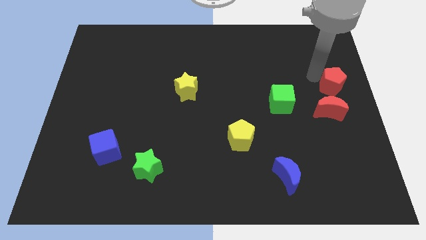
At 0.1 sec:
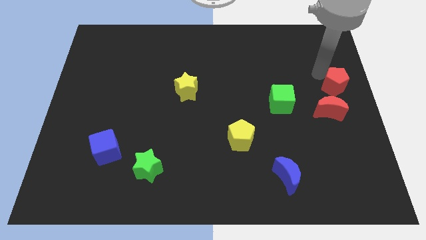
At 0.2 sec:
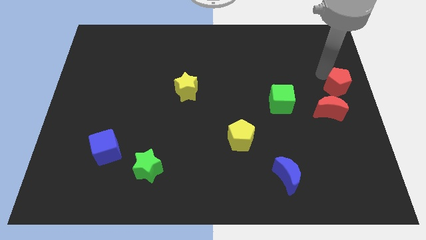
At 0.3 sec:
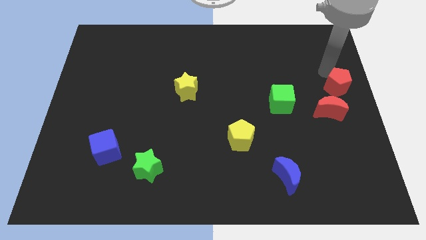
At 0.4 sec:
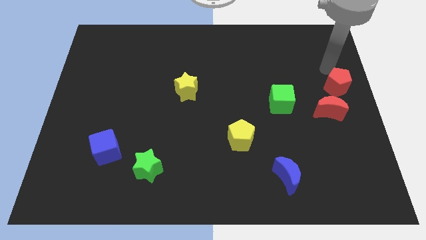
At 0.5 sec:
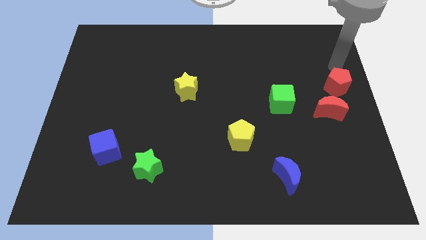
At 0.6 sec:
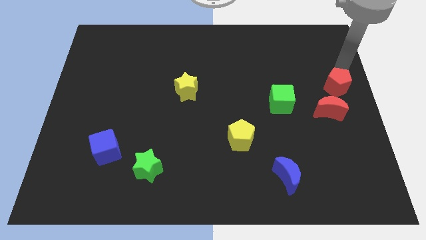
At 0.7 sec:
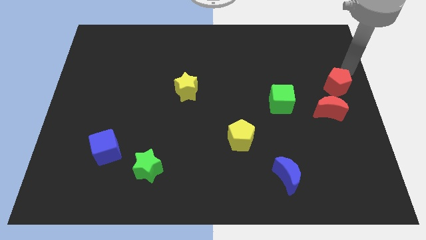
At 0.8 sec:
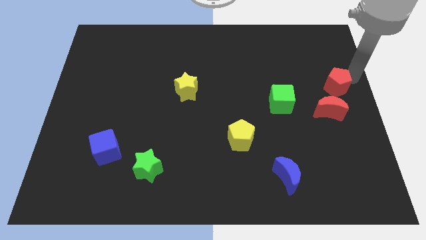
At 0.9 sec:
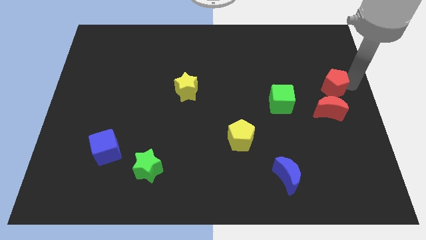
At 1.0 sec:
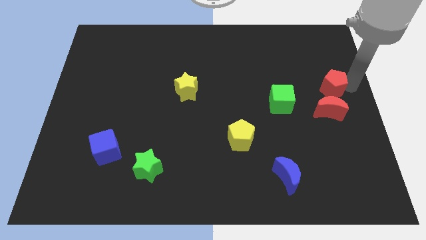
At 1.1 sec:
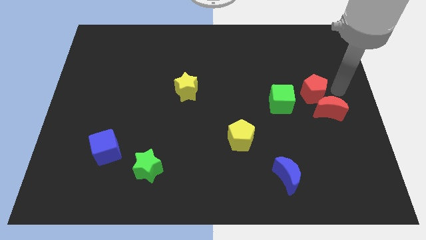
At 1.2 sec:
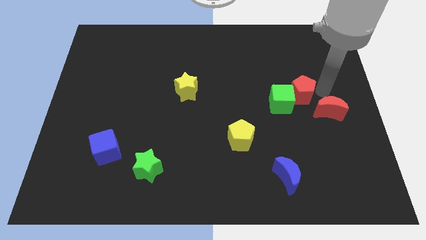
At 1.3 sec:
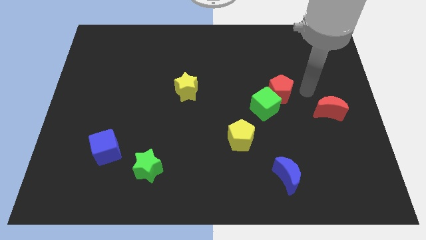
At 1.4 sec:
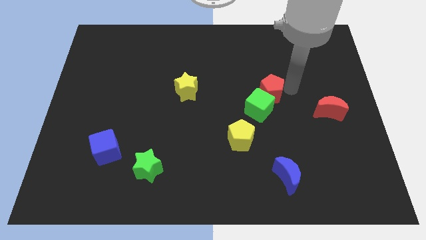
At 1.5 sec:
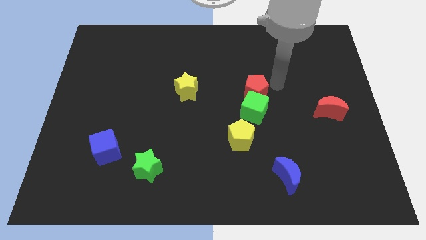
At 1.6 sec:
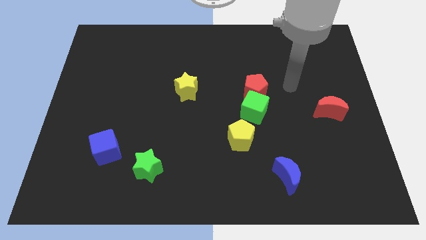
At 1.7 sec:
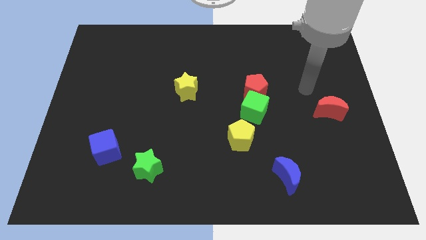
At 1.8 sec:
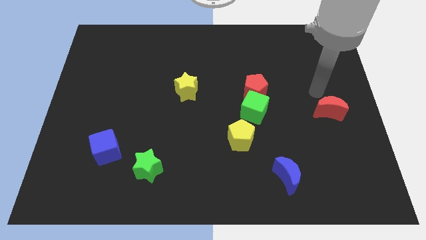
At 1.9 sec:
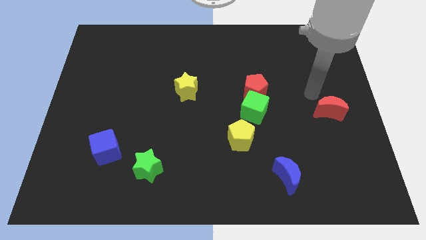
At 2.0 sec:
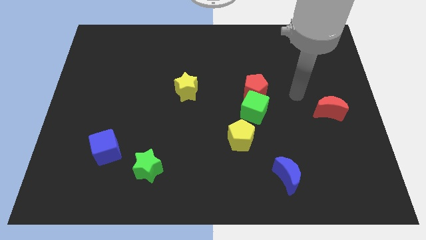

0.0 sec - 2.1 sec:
move red pentagon above green cube

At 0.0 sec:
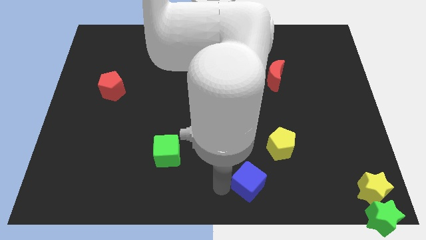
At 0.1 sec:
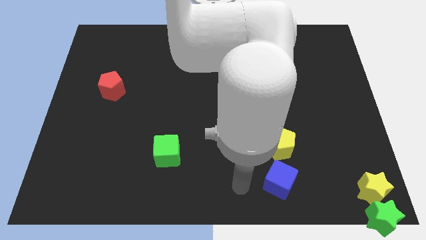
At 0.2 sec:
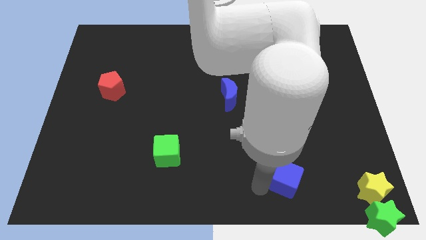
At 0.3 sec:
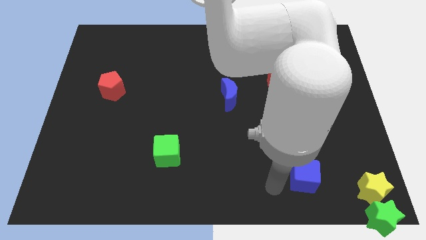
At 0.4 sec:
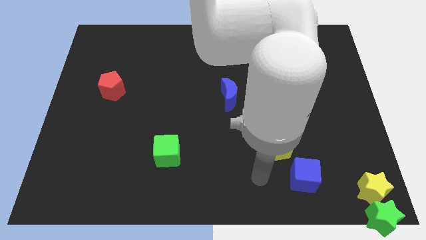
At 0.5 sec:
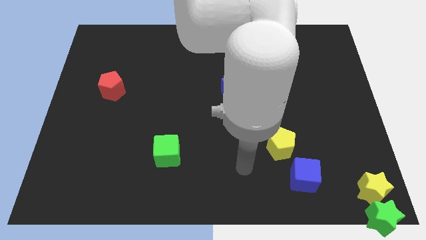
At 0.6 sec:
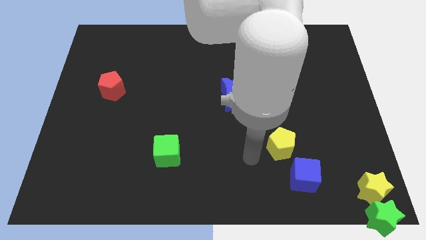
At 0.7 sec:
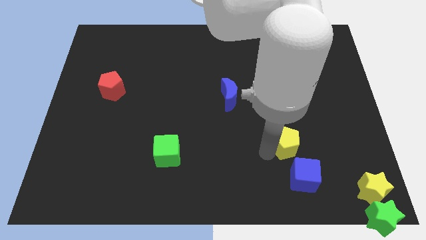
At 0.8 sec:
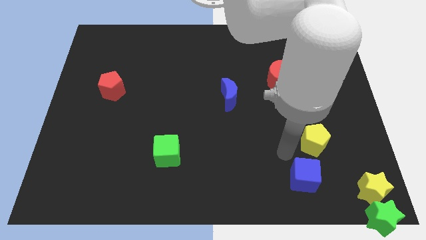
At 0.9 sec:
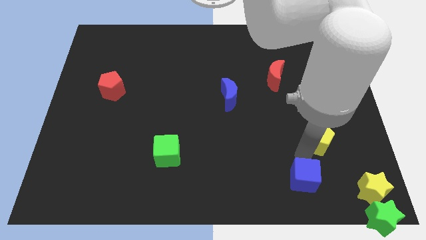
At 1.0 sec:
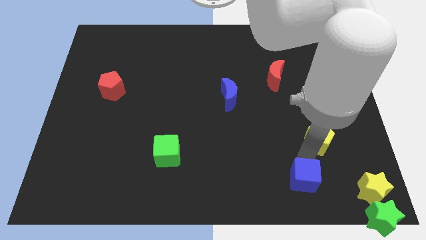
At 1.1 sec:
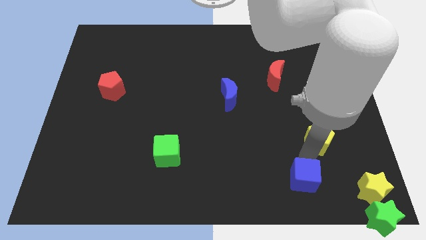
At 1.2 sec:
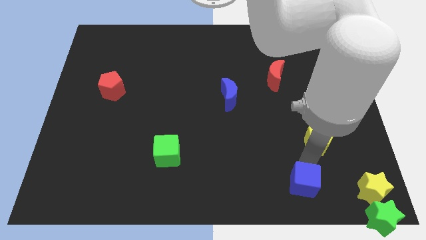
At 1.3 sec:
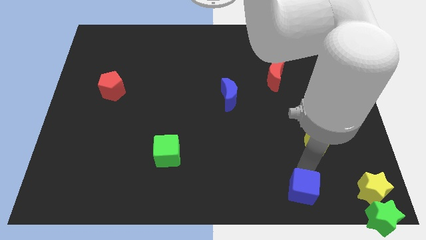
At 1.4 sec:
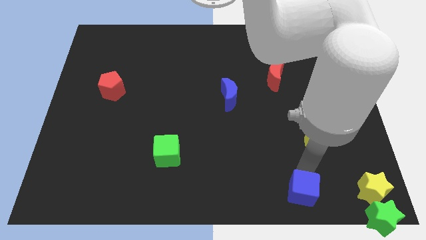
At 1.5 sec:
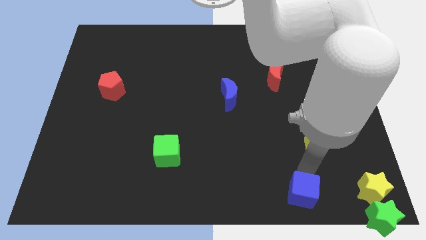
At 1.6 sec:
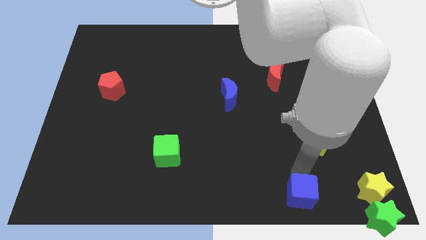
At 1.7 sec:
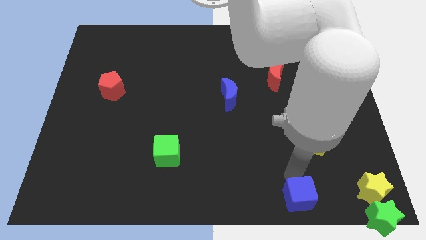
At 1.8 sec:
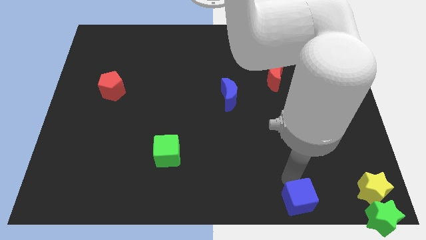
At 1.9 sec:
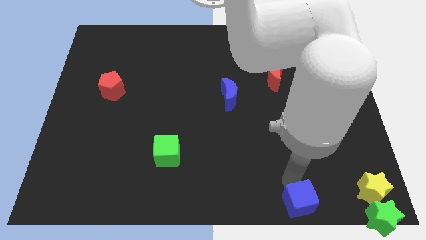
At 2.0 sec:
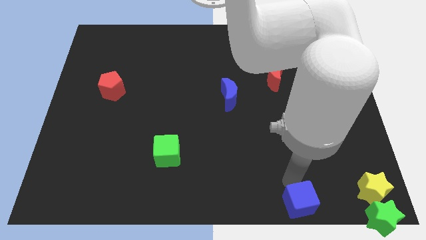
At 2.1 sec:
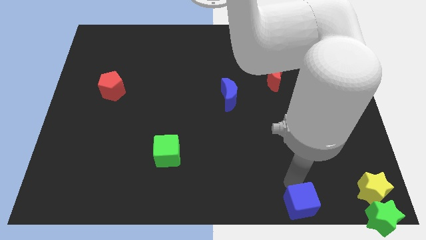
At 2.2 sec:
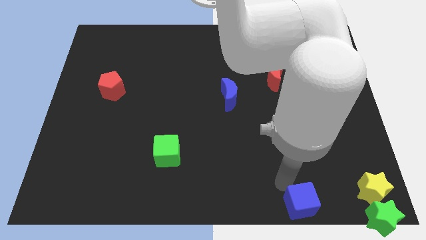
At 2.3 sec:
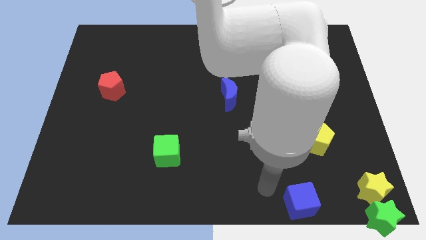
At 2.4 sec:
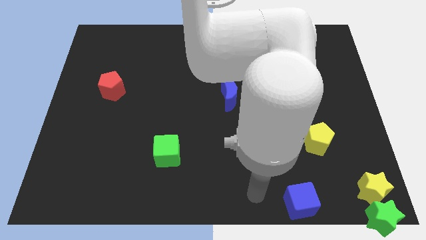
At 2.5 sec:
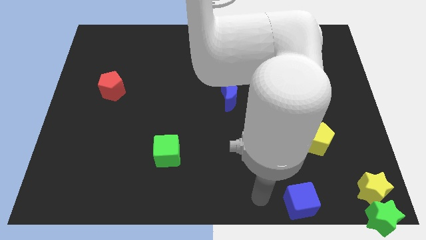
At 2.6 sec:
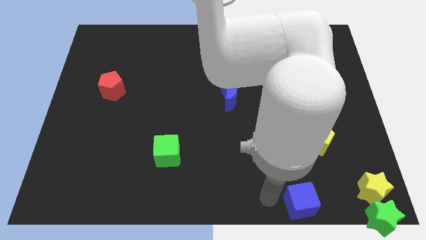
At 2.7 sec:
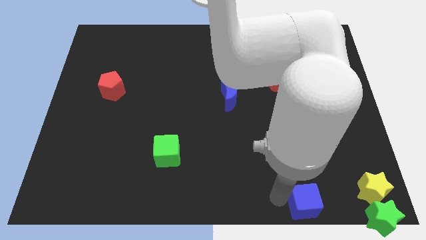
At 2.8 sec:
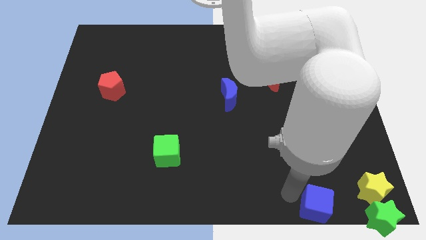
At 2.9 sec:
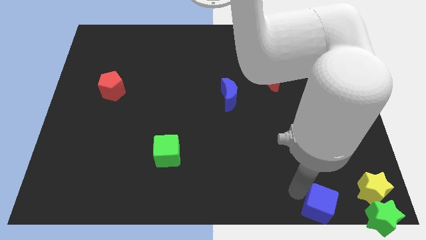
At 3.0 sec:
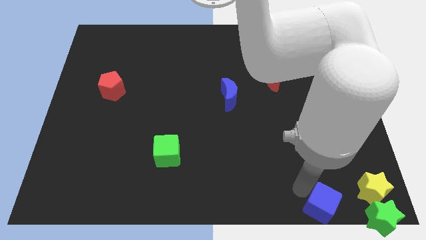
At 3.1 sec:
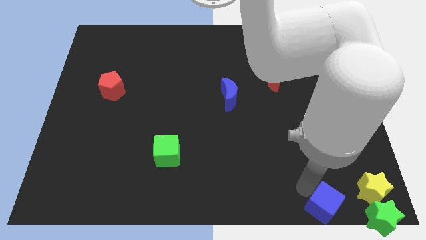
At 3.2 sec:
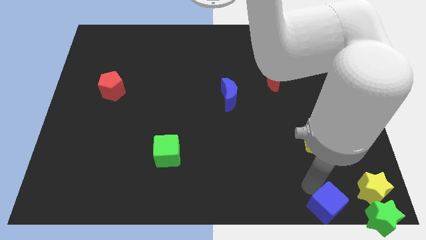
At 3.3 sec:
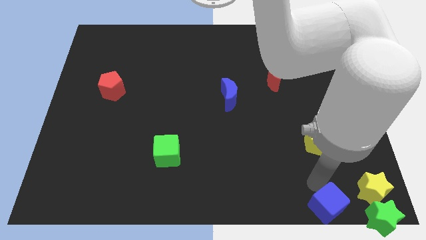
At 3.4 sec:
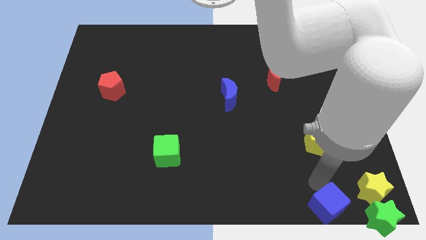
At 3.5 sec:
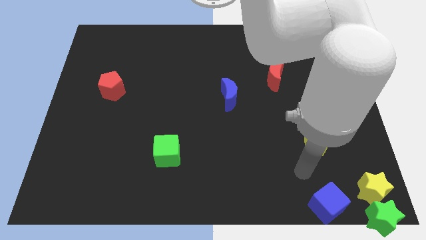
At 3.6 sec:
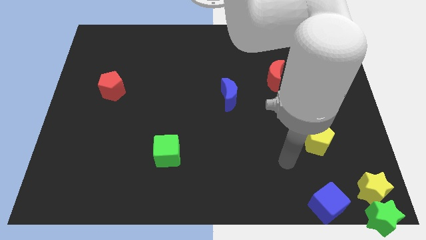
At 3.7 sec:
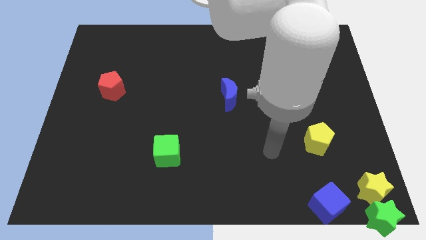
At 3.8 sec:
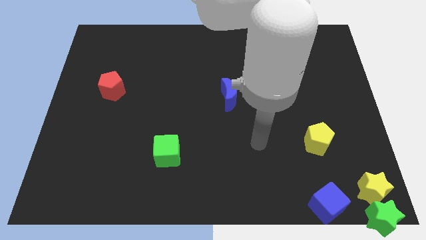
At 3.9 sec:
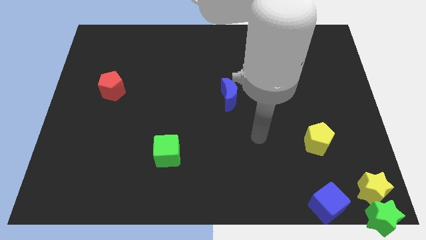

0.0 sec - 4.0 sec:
separate the blue moon towards bottom right corner

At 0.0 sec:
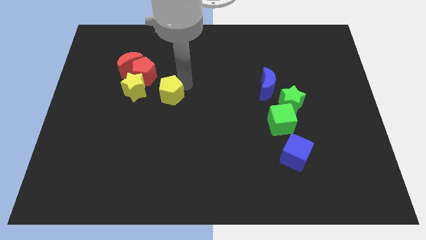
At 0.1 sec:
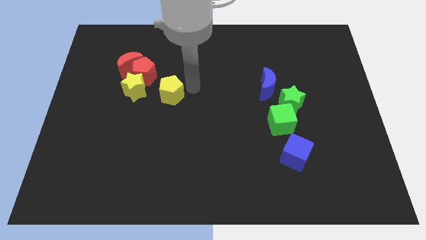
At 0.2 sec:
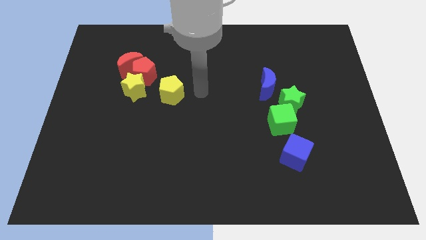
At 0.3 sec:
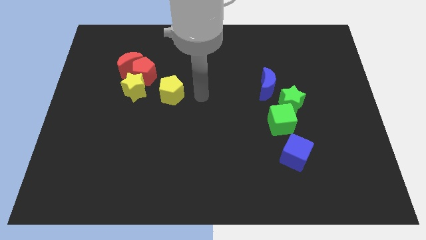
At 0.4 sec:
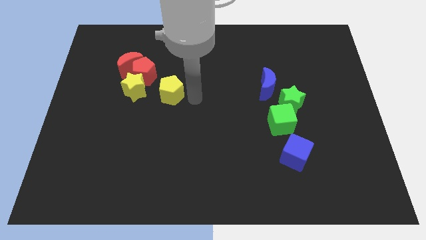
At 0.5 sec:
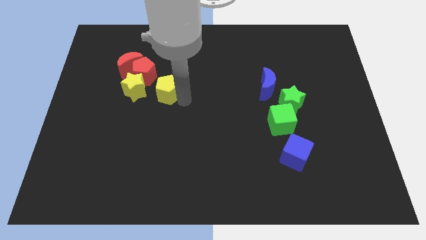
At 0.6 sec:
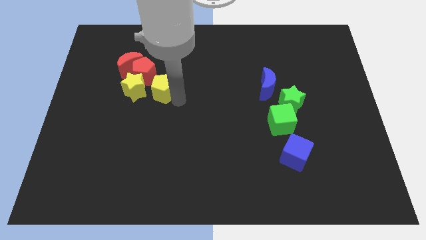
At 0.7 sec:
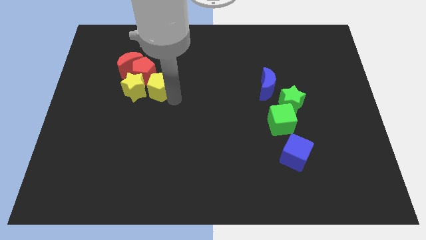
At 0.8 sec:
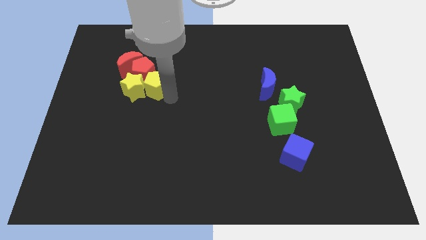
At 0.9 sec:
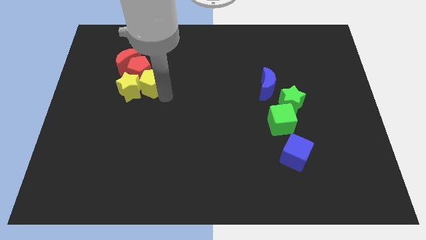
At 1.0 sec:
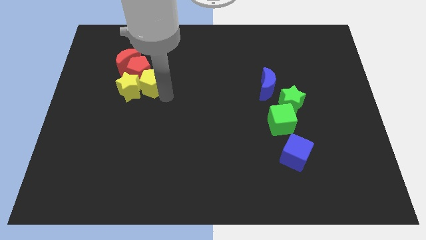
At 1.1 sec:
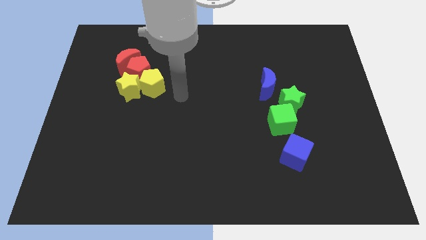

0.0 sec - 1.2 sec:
push the yellow pentagon to the right of the yellow star

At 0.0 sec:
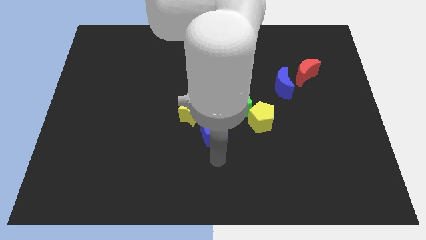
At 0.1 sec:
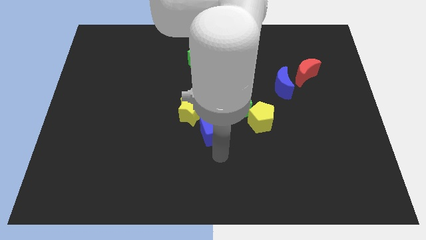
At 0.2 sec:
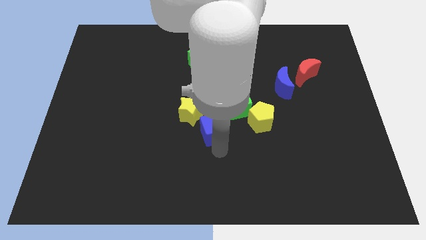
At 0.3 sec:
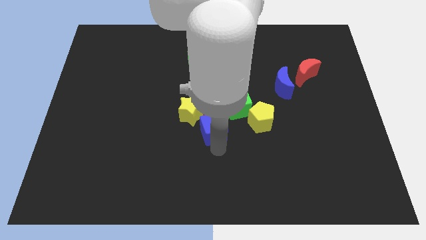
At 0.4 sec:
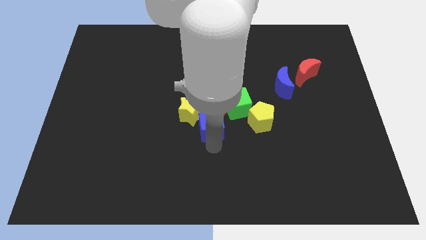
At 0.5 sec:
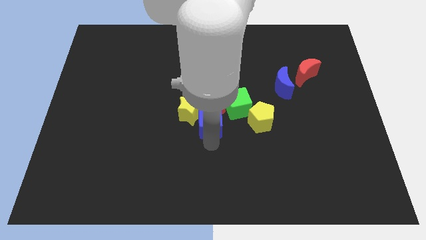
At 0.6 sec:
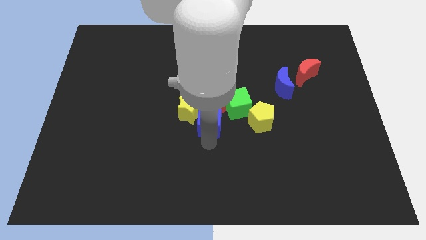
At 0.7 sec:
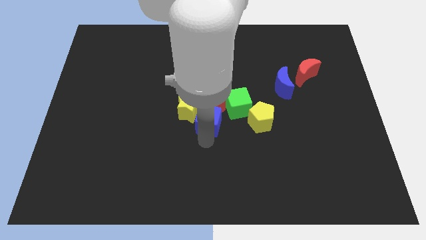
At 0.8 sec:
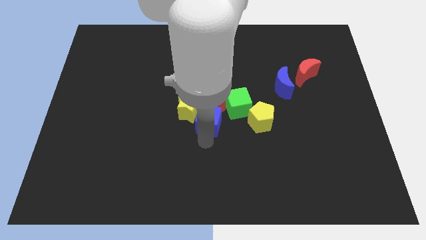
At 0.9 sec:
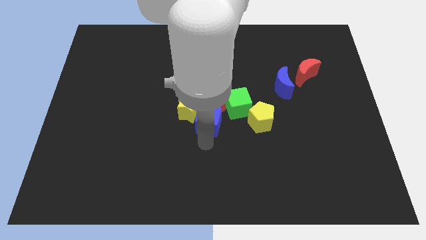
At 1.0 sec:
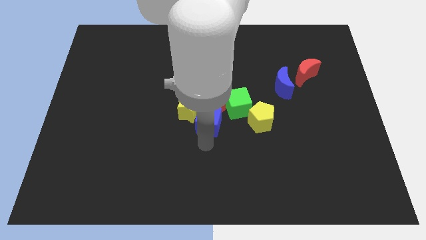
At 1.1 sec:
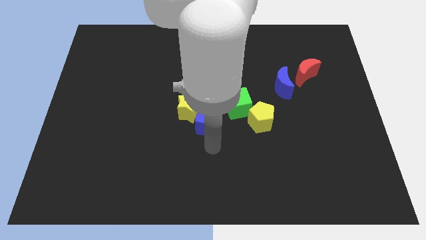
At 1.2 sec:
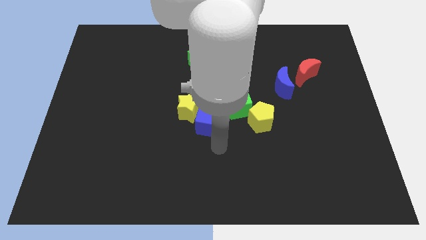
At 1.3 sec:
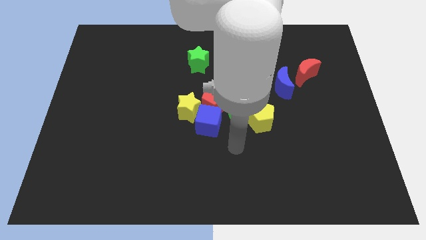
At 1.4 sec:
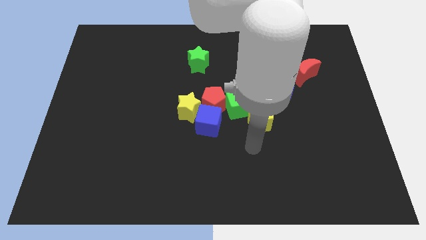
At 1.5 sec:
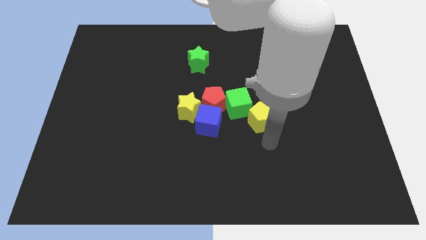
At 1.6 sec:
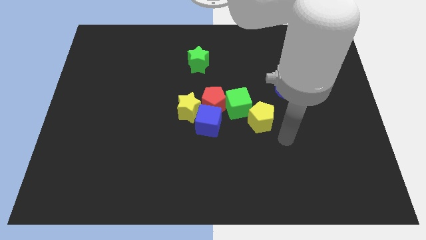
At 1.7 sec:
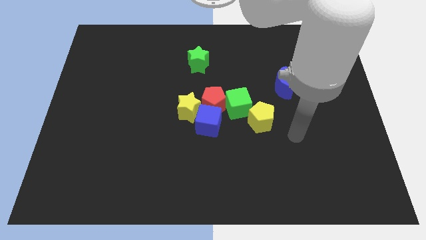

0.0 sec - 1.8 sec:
move the arm away from the blue cube
